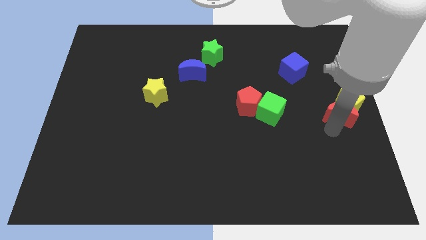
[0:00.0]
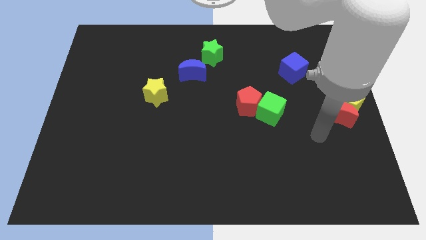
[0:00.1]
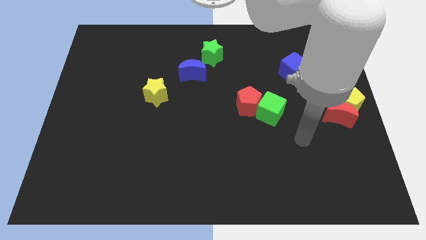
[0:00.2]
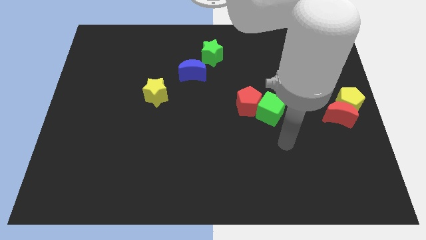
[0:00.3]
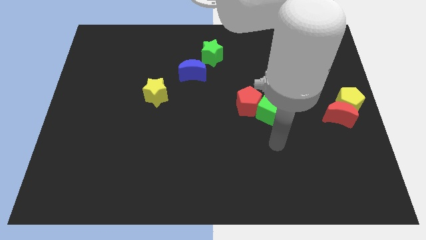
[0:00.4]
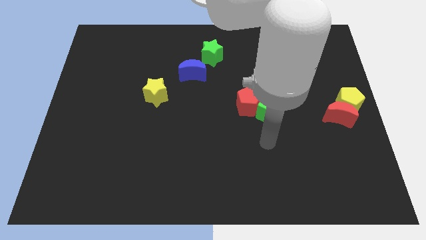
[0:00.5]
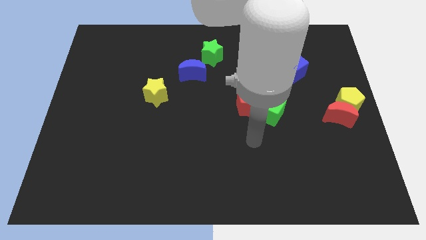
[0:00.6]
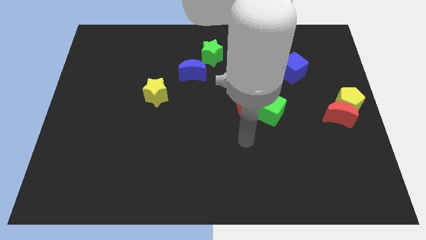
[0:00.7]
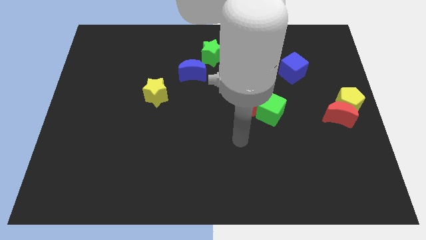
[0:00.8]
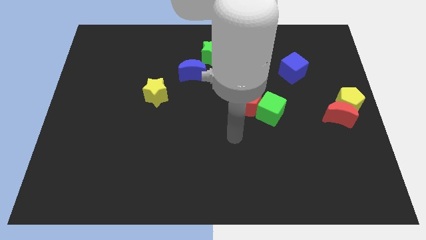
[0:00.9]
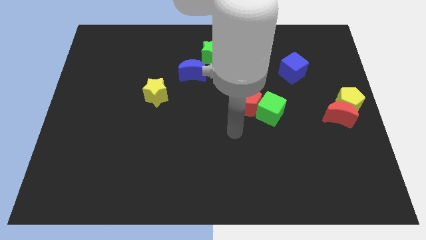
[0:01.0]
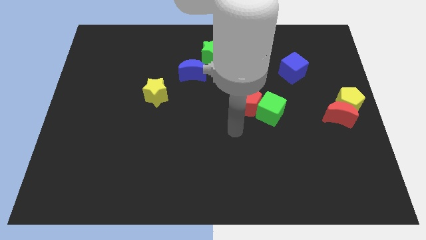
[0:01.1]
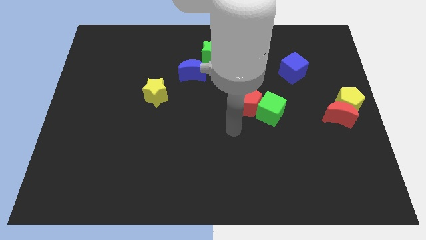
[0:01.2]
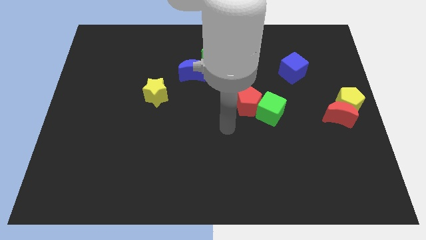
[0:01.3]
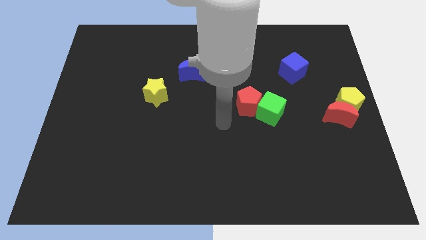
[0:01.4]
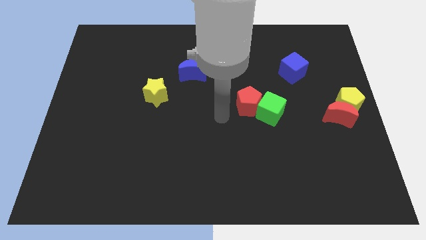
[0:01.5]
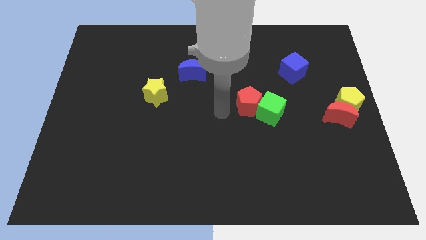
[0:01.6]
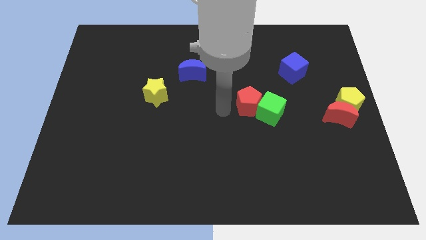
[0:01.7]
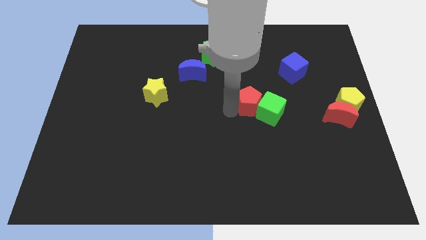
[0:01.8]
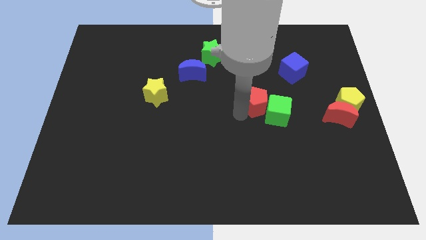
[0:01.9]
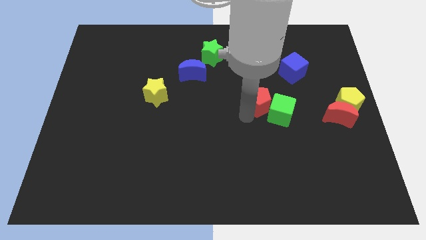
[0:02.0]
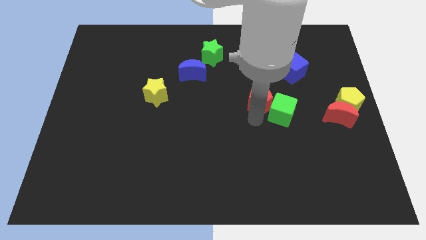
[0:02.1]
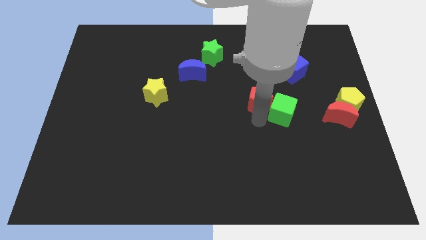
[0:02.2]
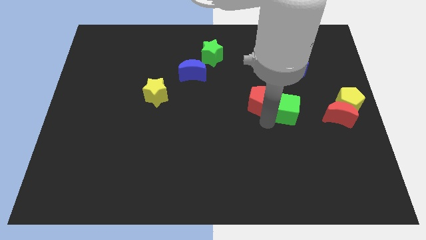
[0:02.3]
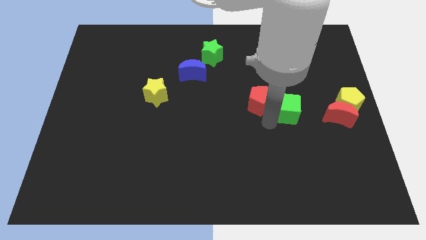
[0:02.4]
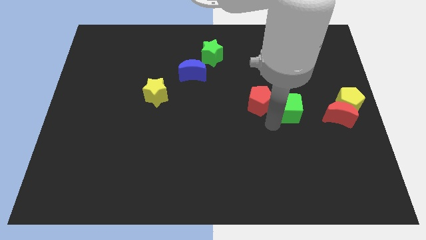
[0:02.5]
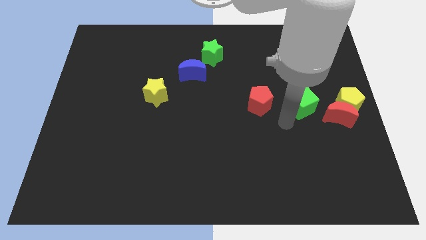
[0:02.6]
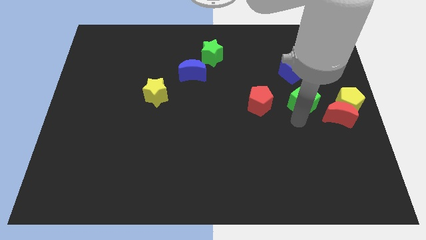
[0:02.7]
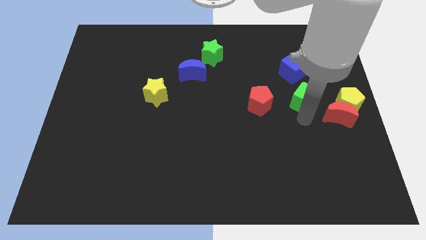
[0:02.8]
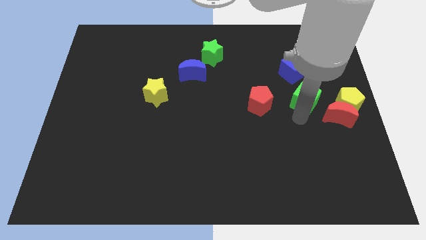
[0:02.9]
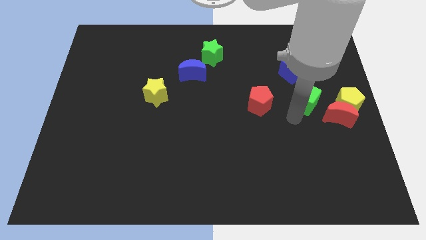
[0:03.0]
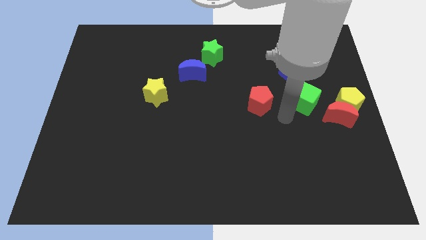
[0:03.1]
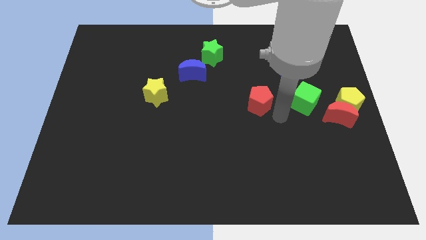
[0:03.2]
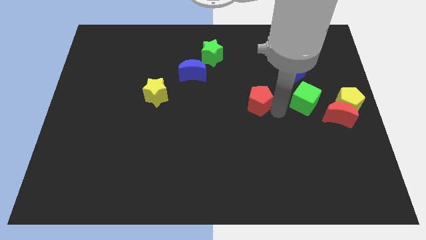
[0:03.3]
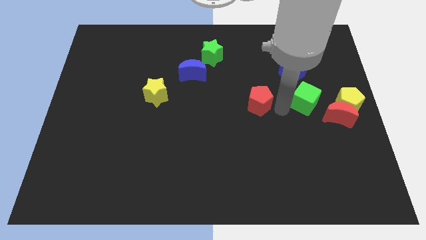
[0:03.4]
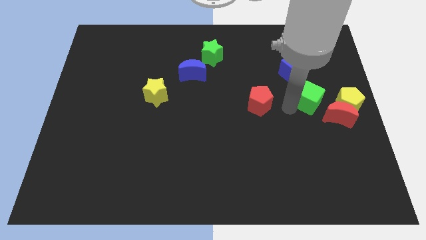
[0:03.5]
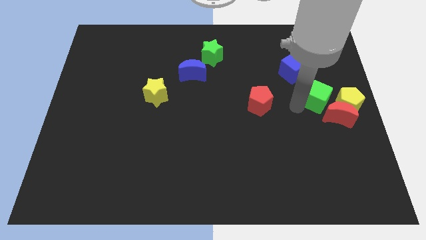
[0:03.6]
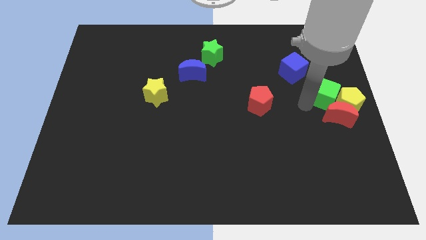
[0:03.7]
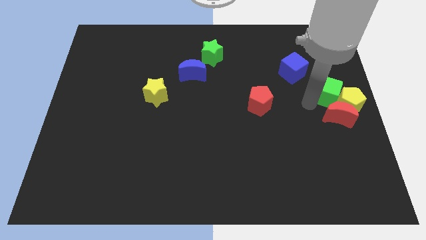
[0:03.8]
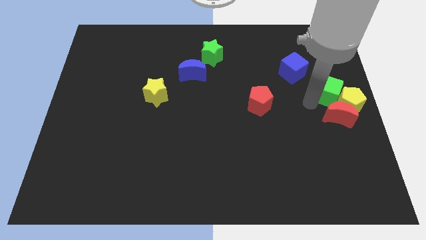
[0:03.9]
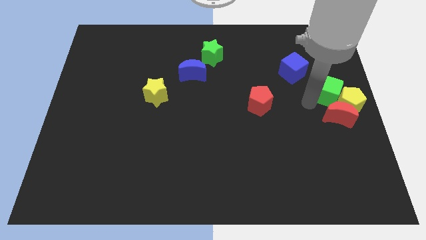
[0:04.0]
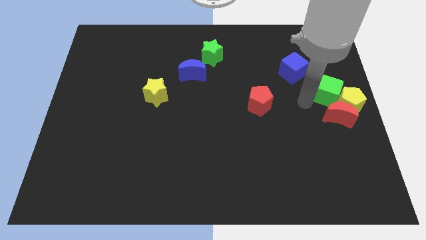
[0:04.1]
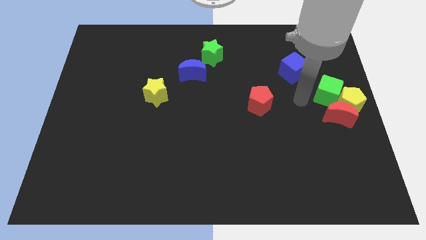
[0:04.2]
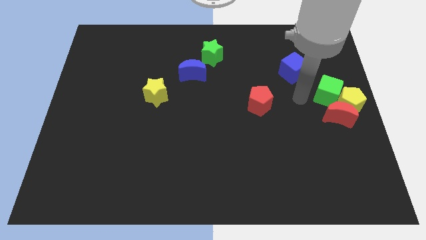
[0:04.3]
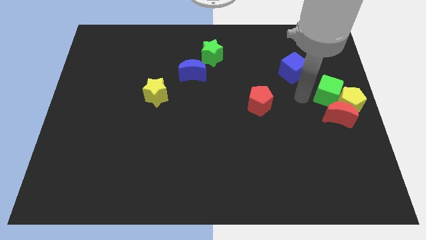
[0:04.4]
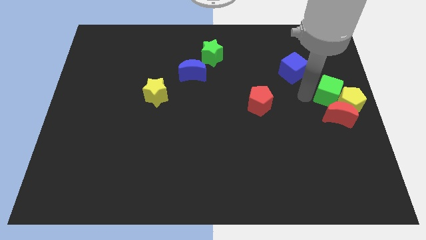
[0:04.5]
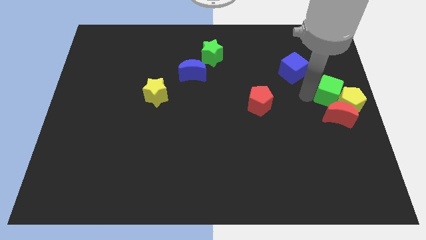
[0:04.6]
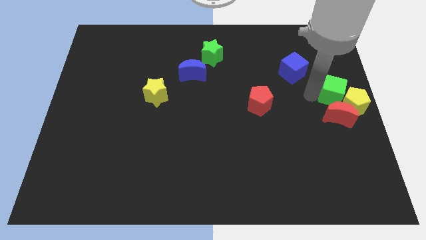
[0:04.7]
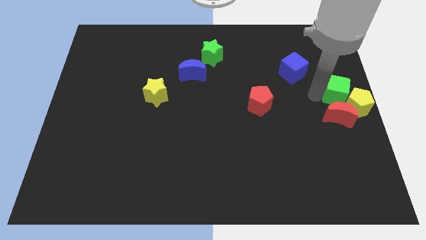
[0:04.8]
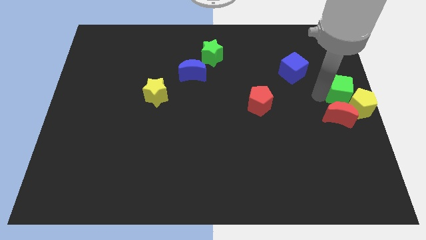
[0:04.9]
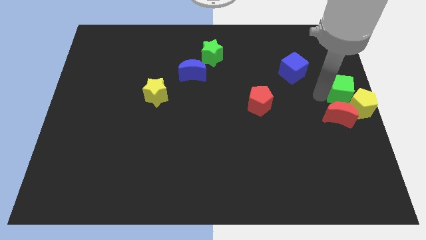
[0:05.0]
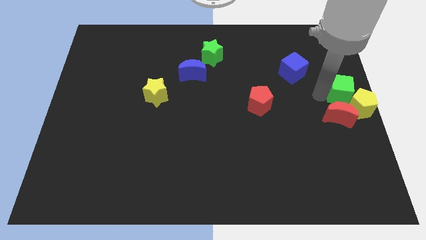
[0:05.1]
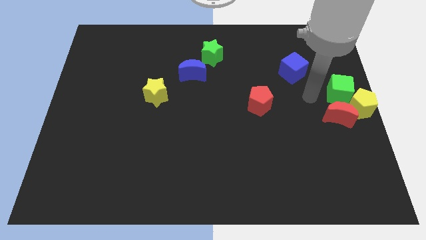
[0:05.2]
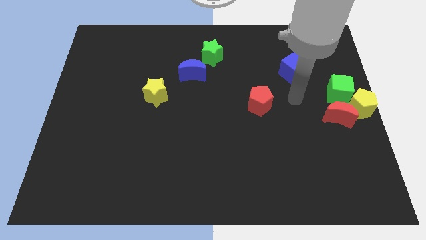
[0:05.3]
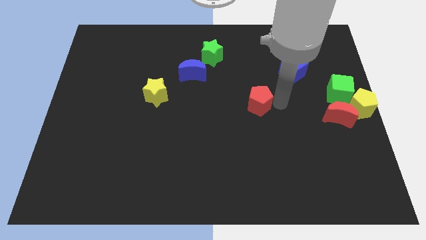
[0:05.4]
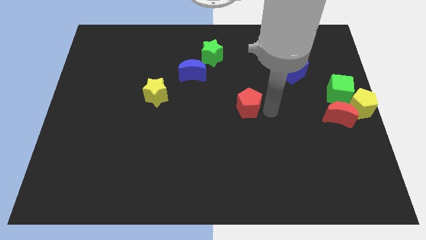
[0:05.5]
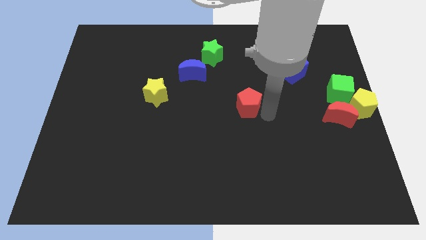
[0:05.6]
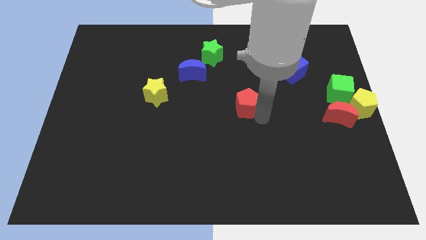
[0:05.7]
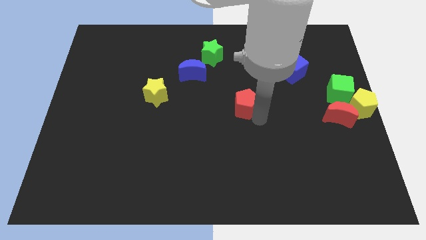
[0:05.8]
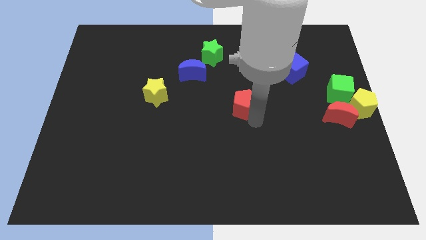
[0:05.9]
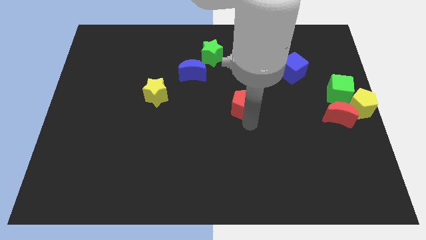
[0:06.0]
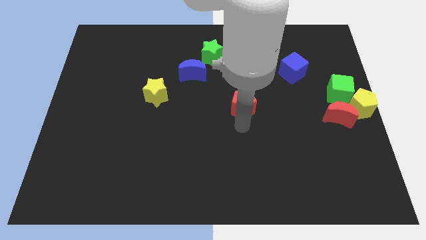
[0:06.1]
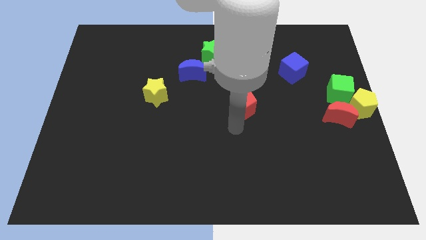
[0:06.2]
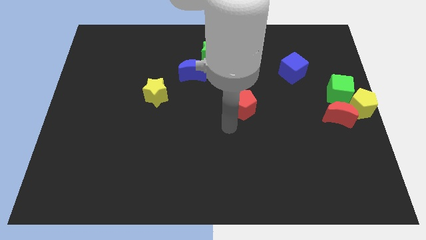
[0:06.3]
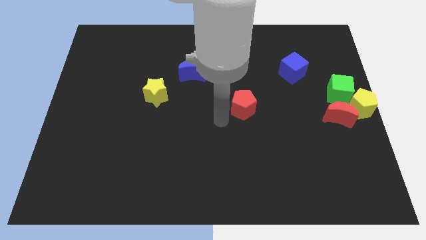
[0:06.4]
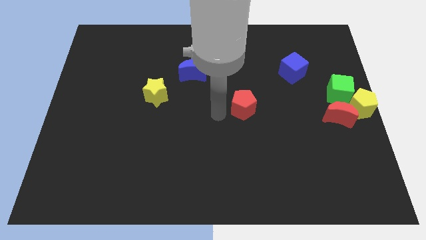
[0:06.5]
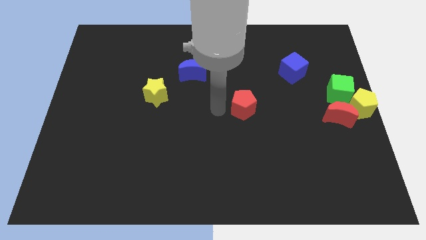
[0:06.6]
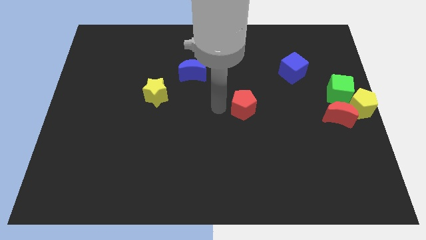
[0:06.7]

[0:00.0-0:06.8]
push the green cube towards the top of the red crescent

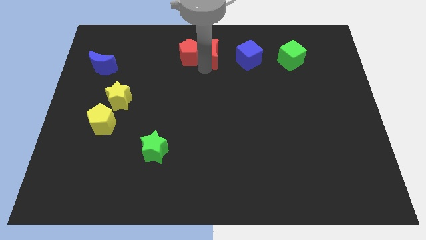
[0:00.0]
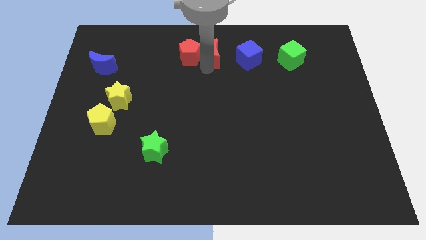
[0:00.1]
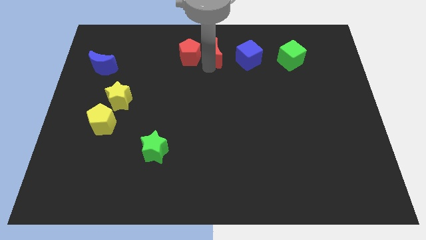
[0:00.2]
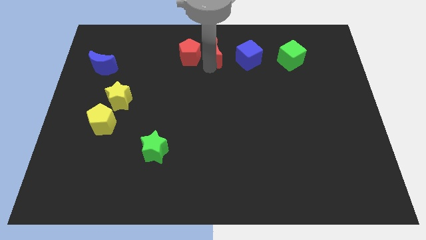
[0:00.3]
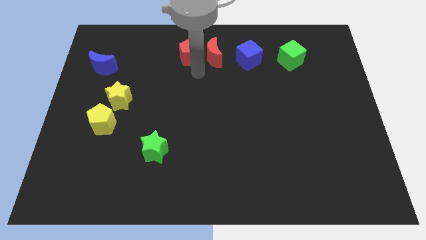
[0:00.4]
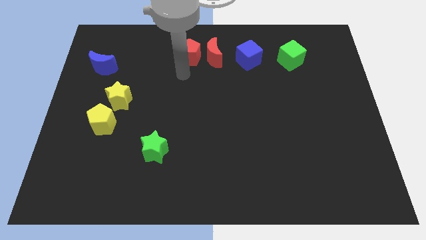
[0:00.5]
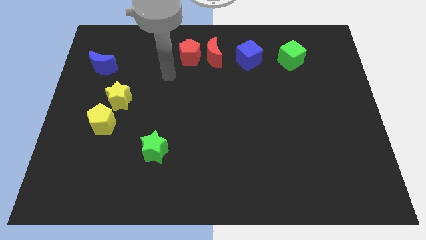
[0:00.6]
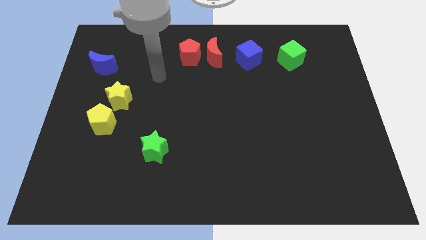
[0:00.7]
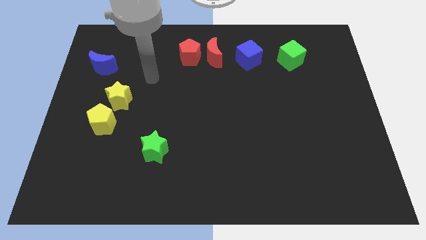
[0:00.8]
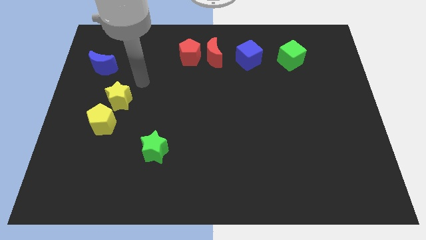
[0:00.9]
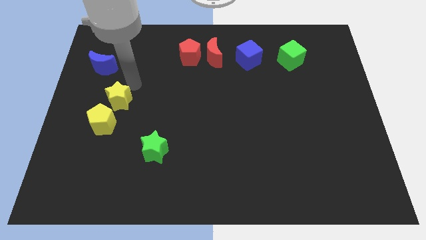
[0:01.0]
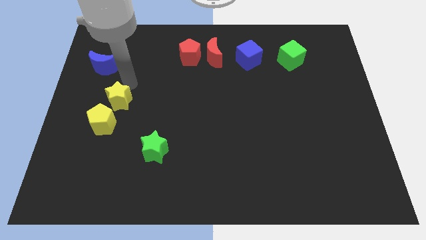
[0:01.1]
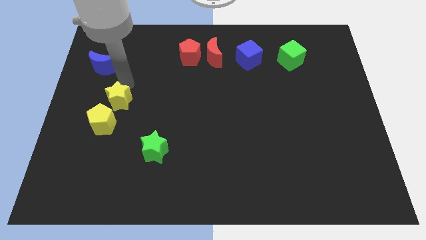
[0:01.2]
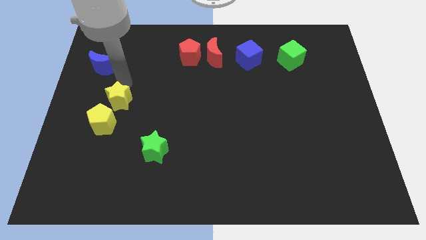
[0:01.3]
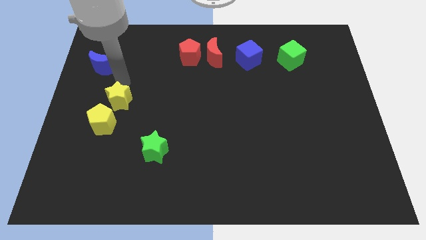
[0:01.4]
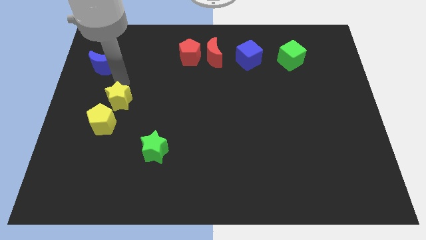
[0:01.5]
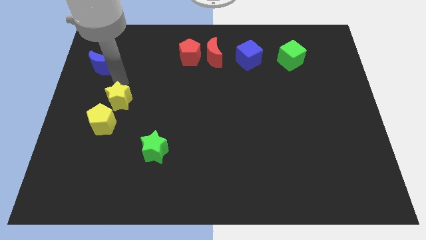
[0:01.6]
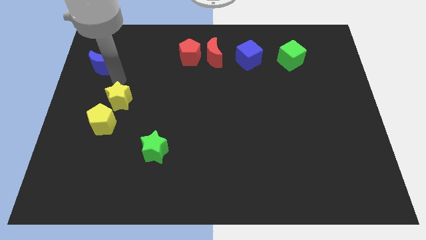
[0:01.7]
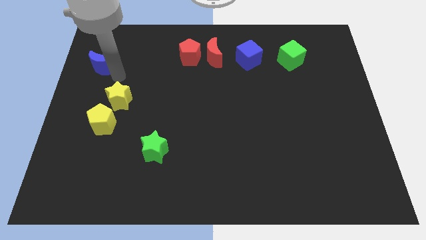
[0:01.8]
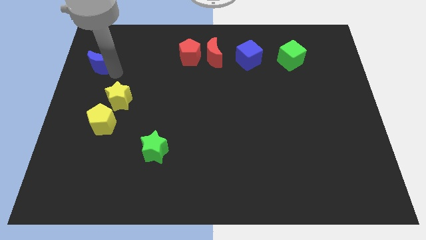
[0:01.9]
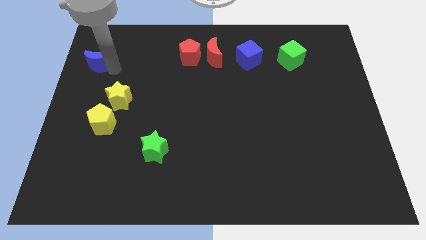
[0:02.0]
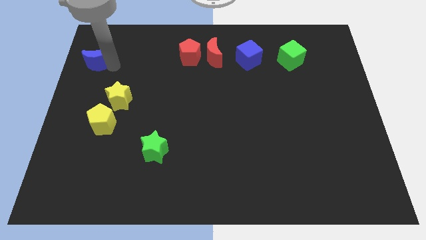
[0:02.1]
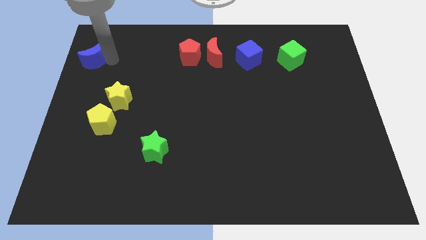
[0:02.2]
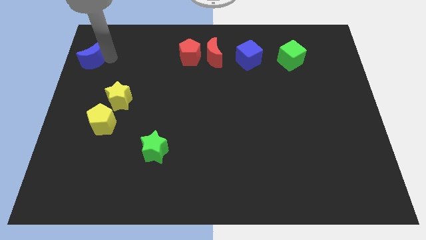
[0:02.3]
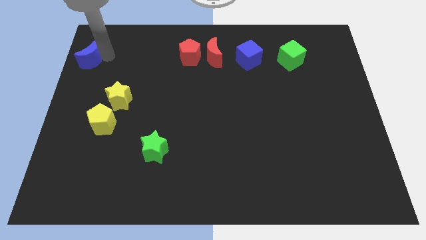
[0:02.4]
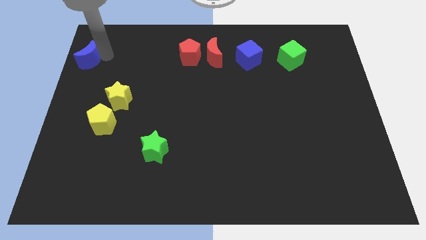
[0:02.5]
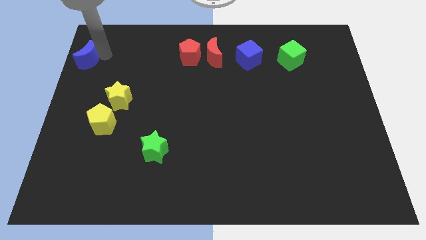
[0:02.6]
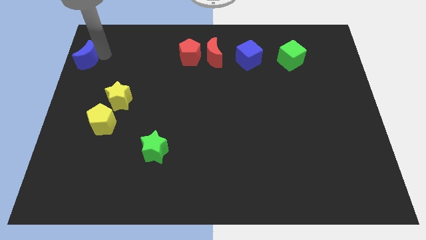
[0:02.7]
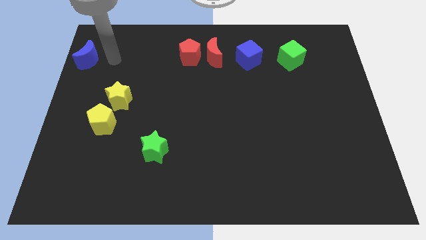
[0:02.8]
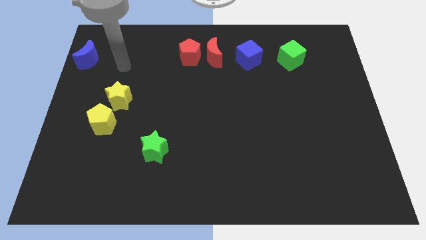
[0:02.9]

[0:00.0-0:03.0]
slide the blue moon towards left side
